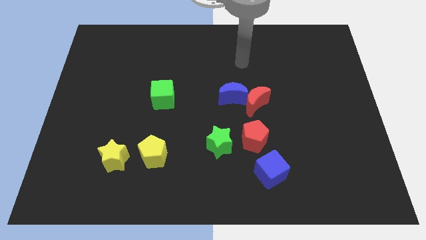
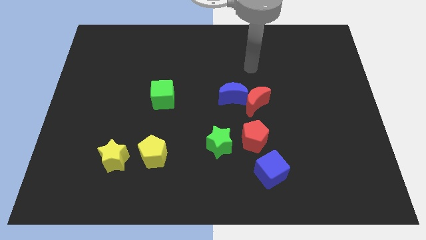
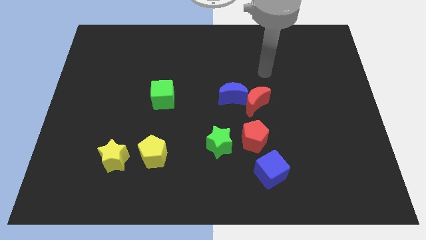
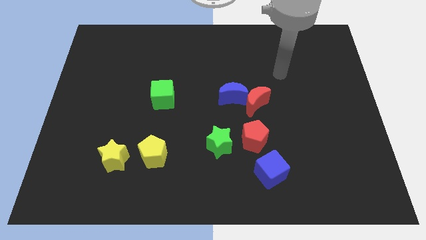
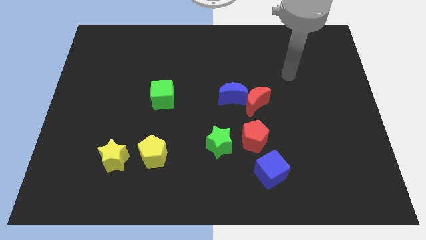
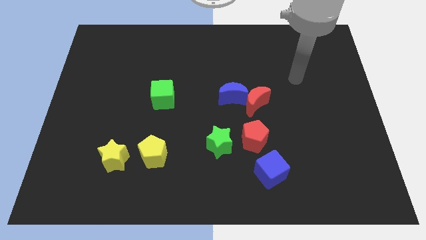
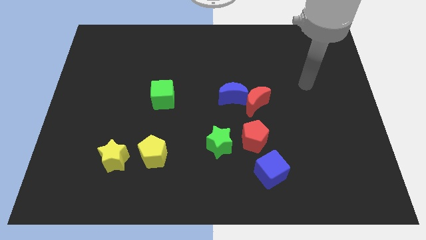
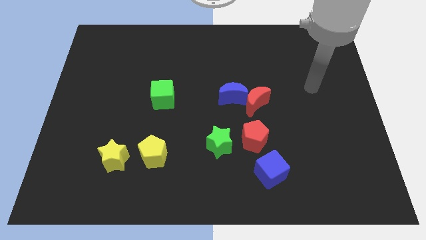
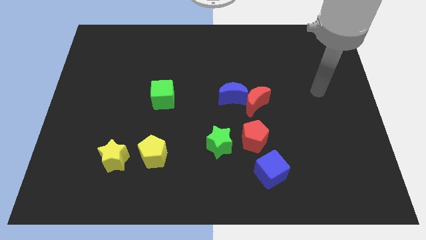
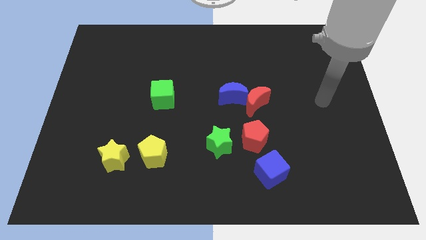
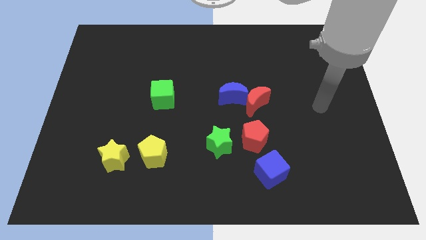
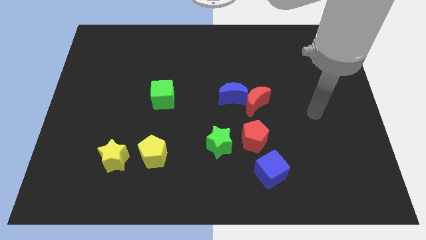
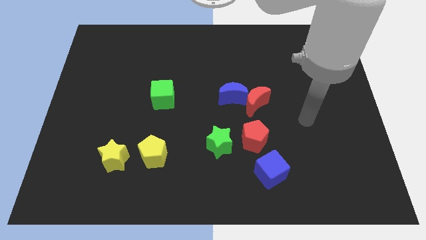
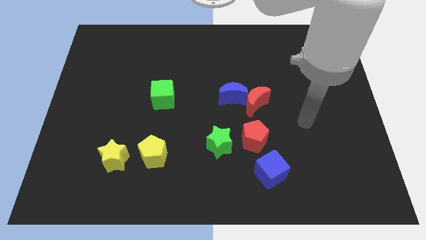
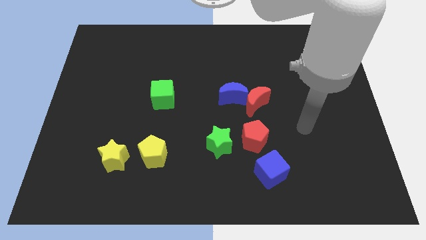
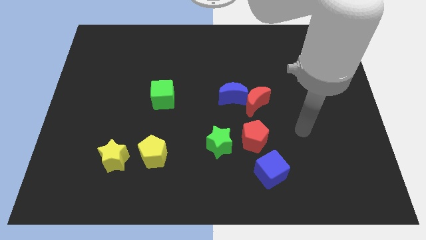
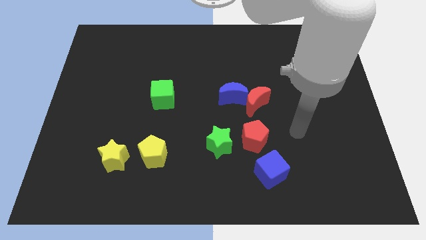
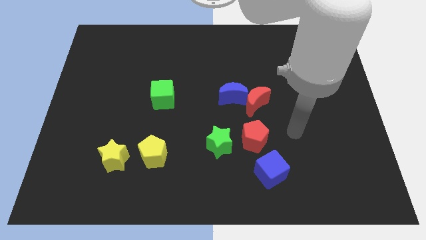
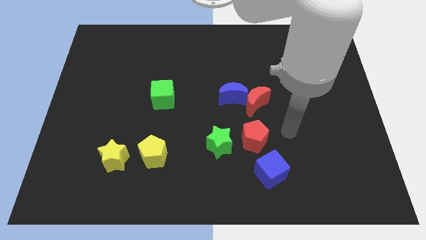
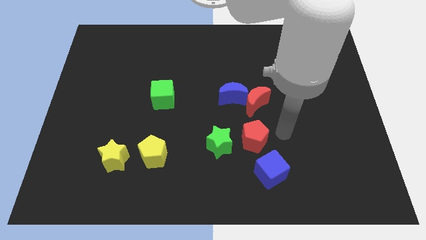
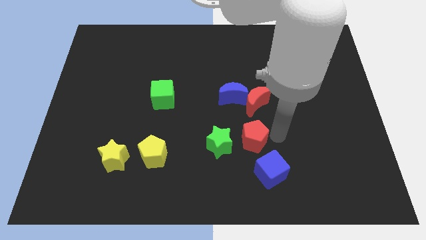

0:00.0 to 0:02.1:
point your arm at the right of the red pentagon

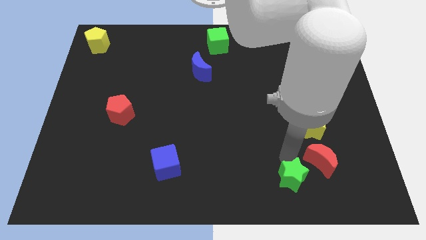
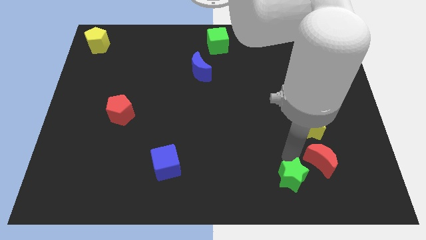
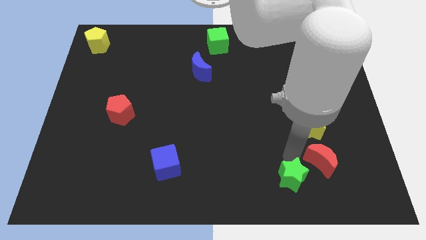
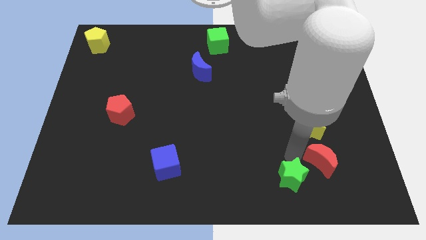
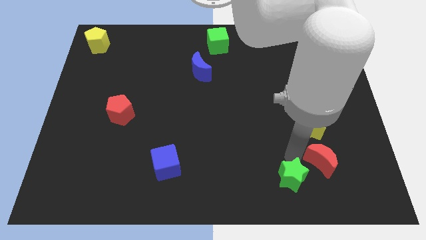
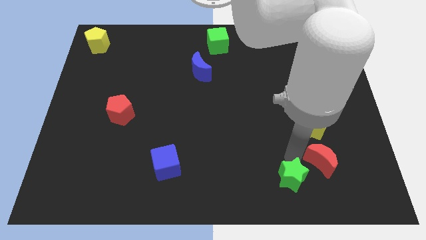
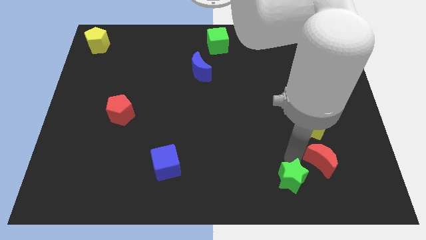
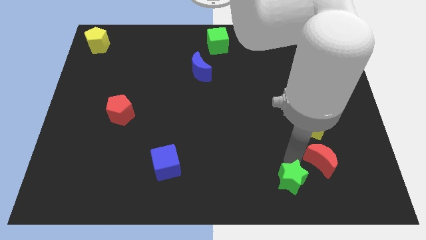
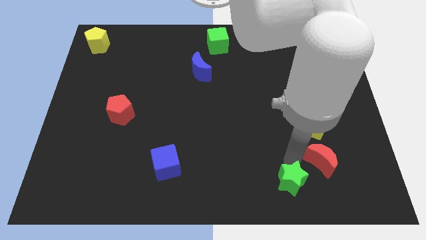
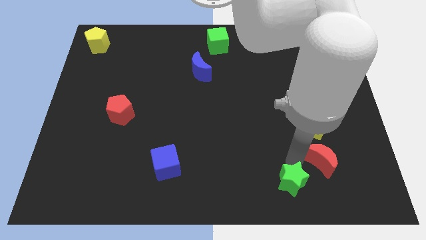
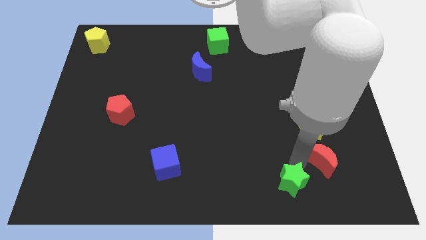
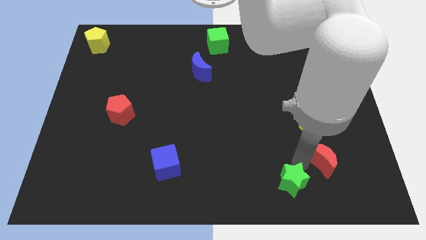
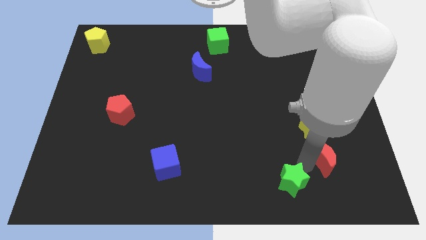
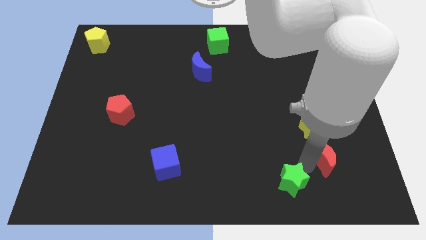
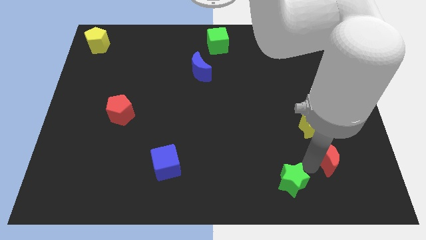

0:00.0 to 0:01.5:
place your hand in between the green star and red crescent

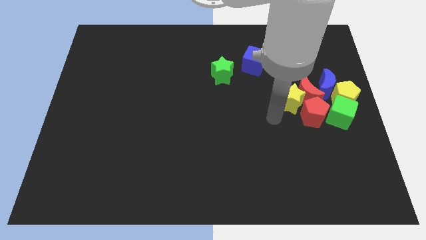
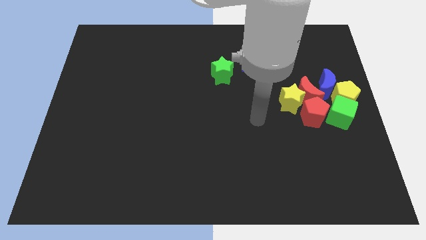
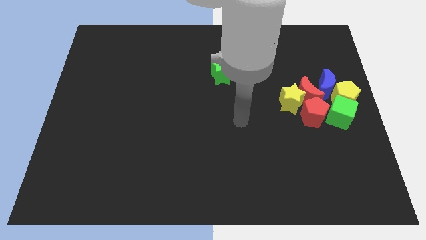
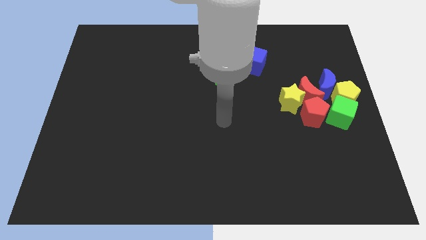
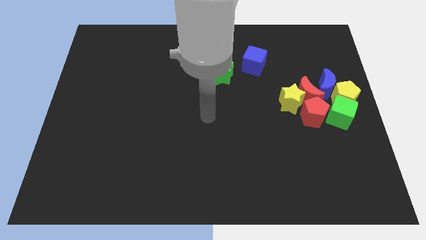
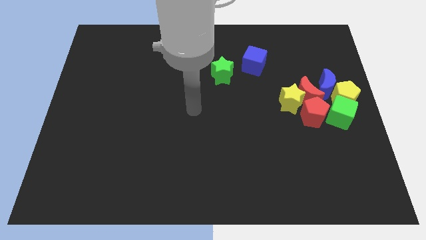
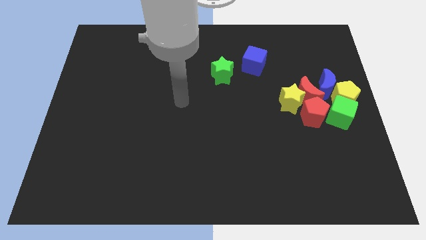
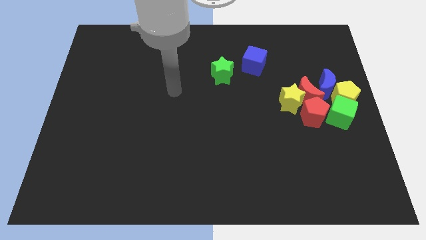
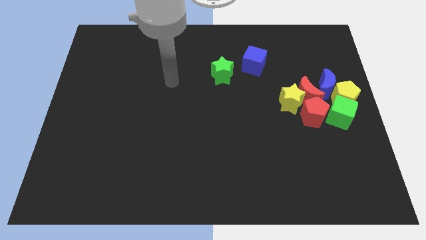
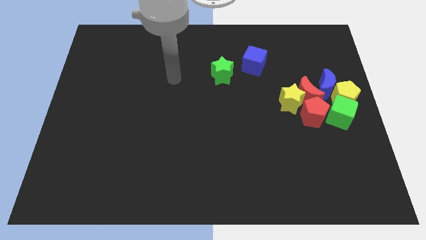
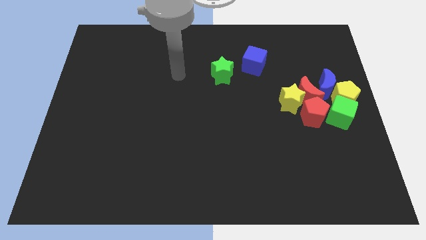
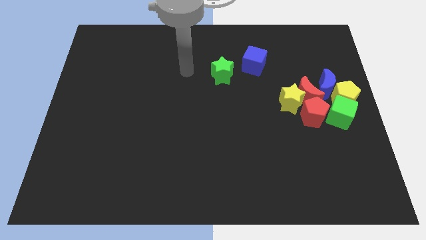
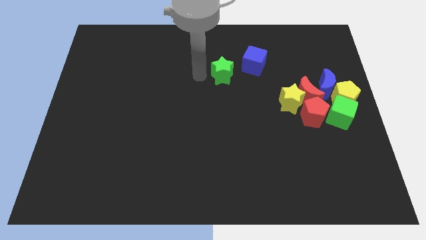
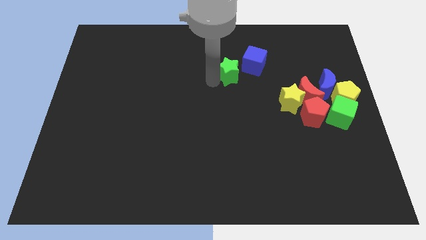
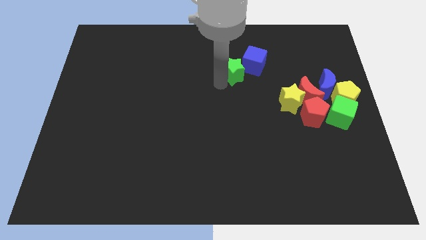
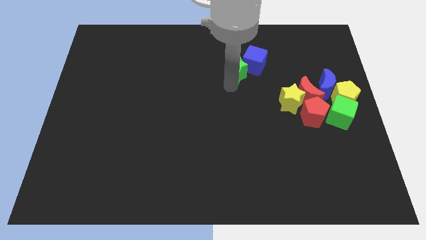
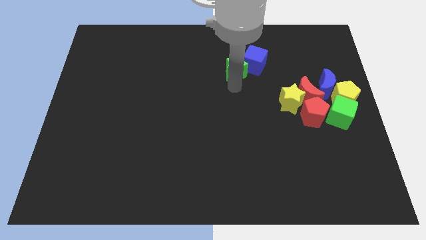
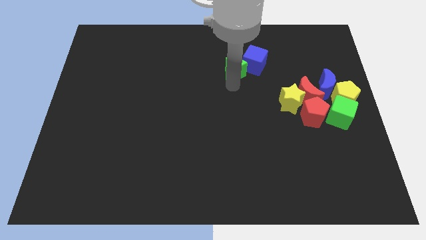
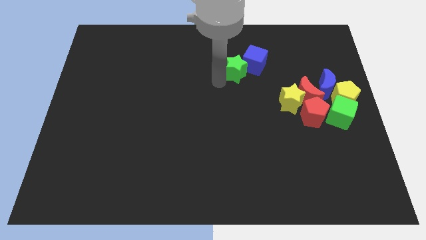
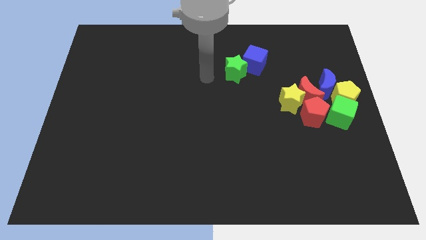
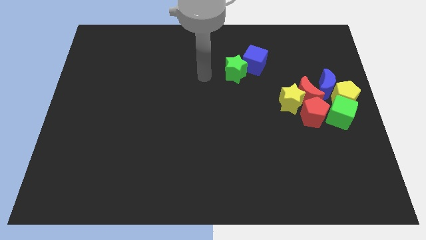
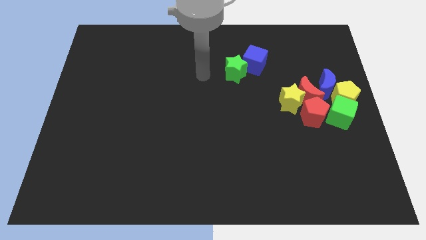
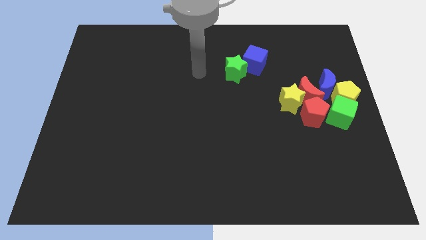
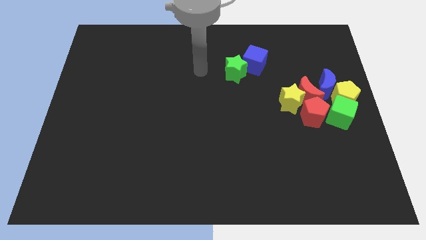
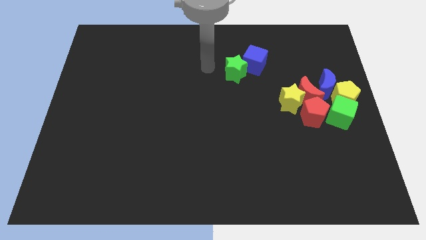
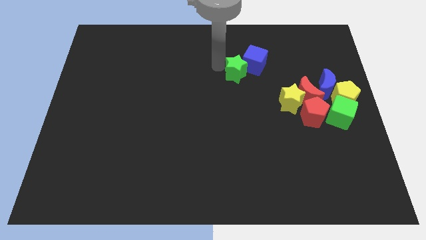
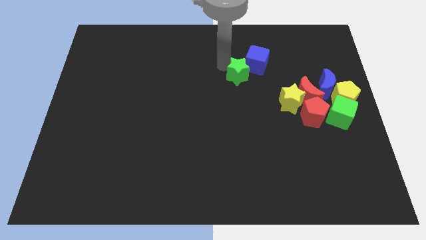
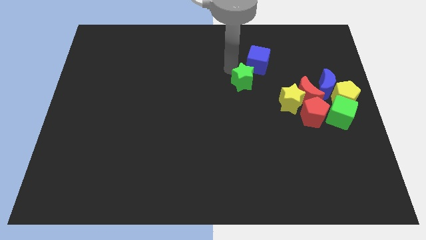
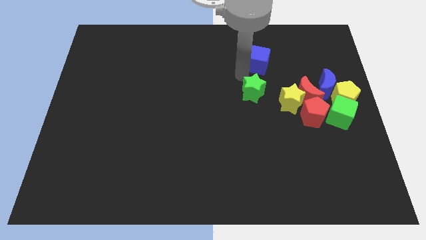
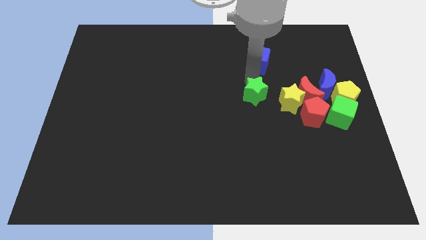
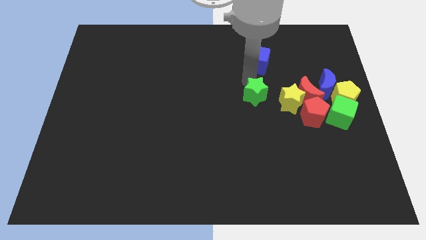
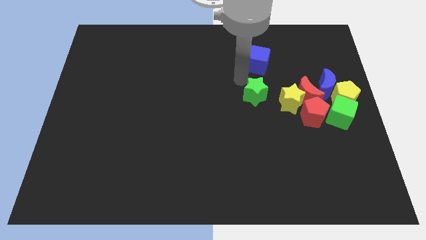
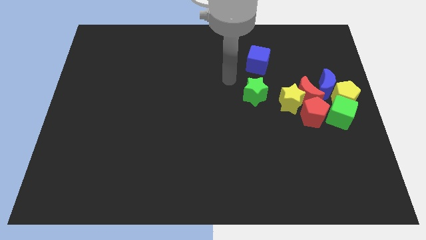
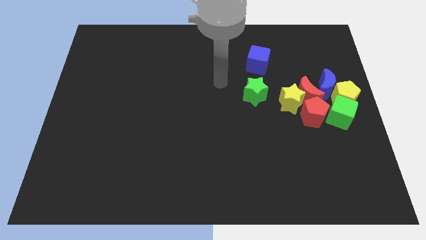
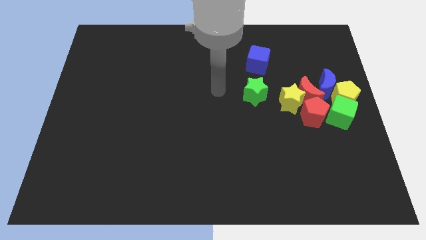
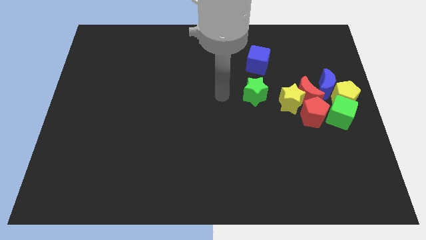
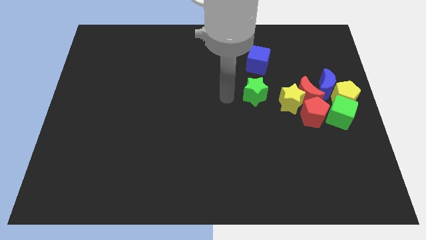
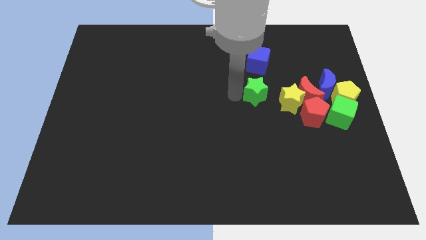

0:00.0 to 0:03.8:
move the green star towards yellow star

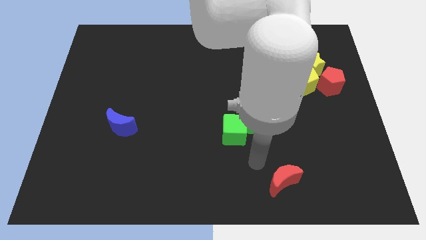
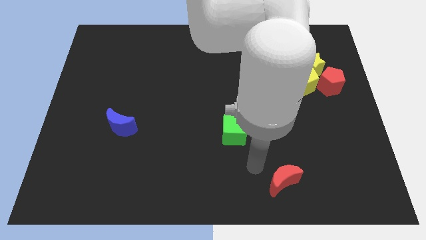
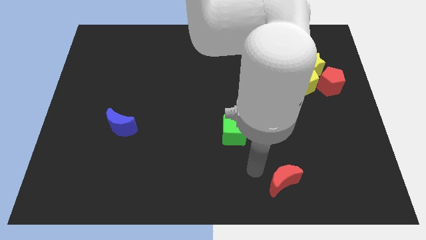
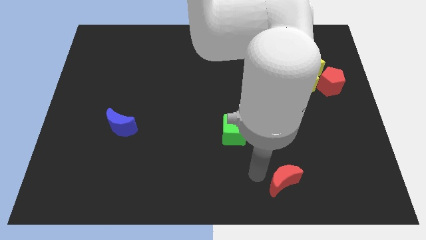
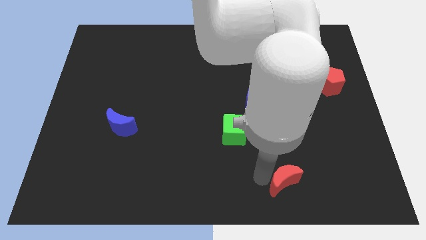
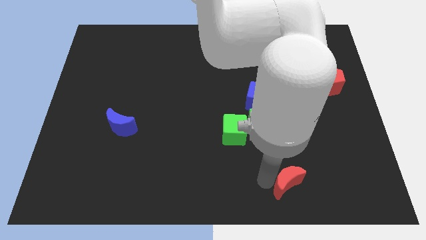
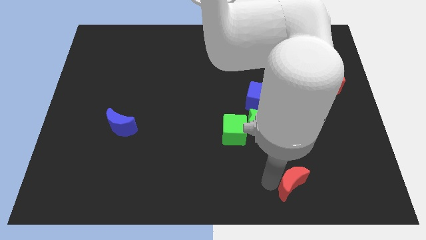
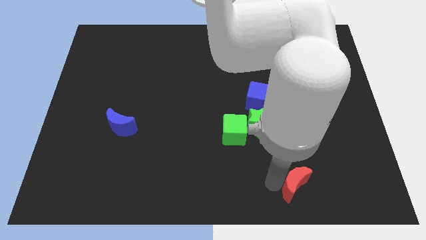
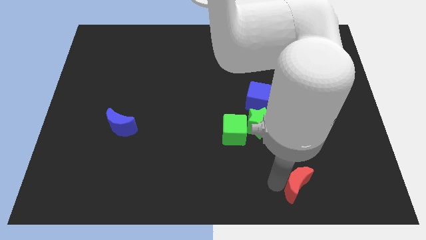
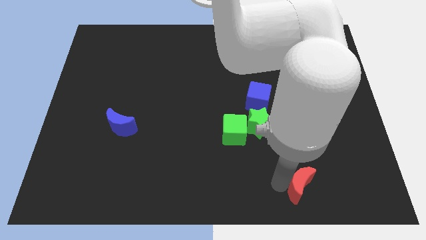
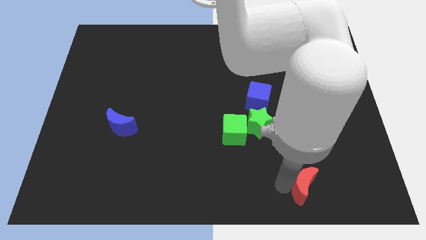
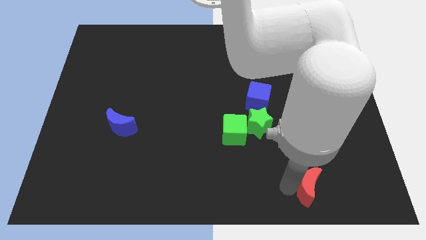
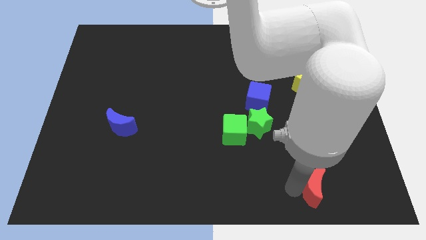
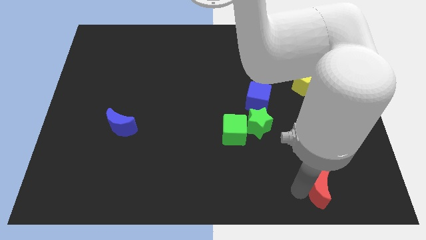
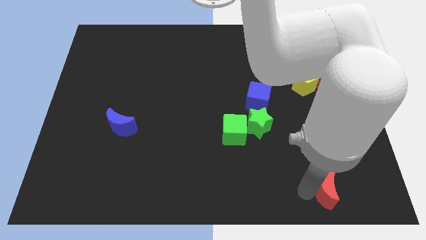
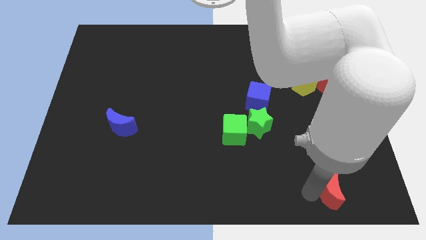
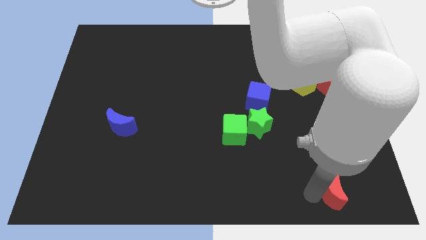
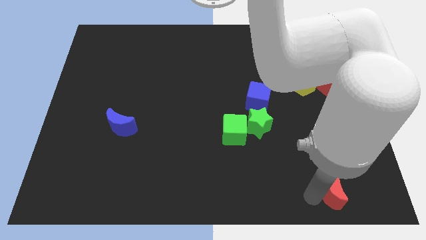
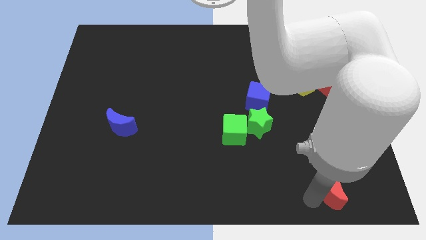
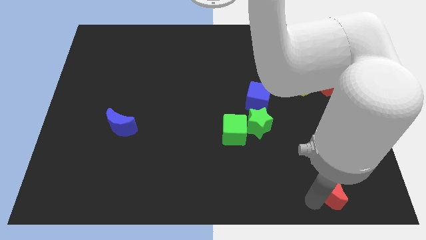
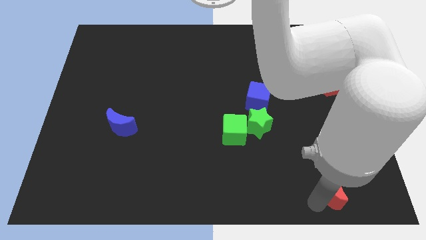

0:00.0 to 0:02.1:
move the red moon towards bottom right side of the board
